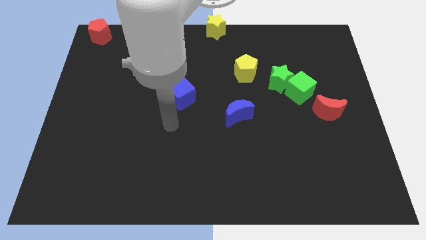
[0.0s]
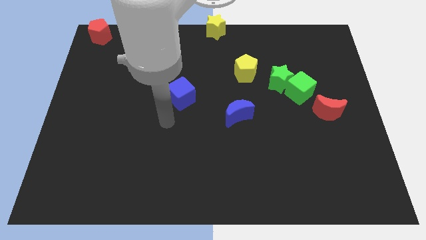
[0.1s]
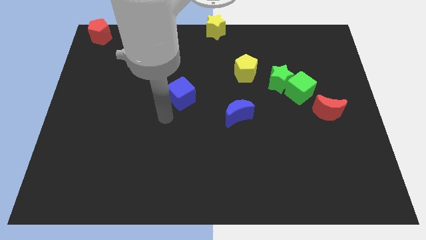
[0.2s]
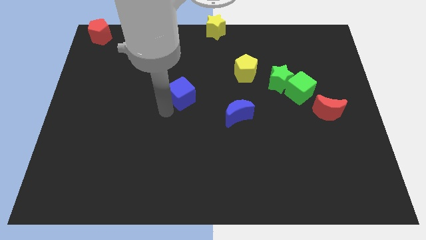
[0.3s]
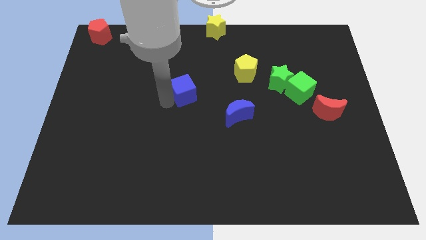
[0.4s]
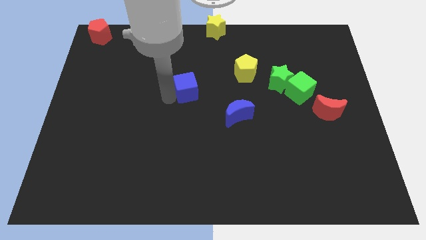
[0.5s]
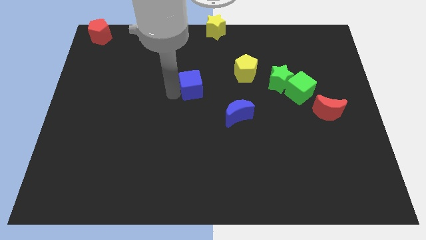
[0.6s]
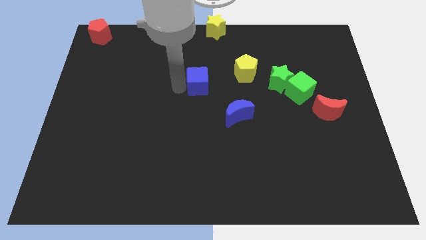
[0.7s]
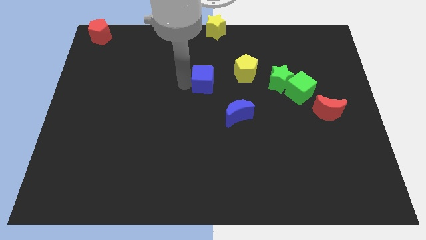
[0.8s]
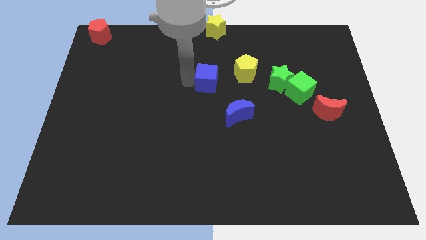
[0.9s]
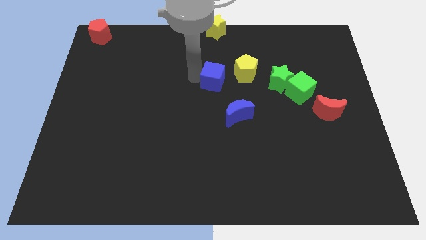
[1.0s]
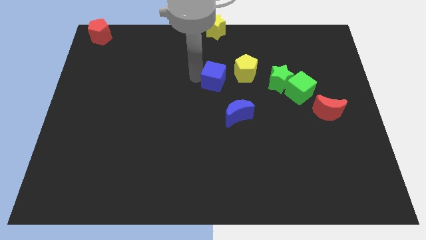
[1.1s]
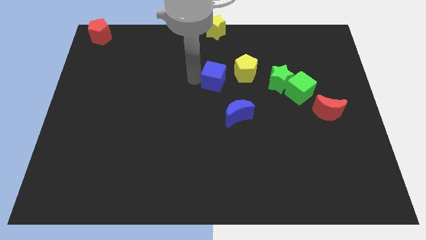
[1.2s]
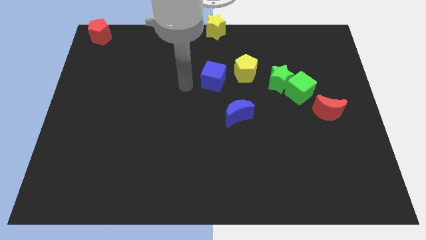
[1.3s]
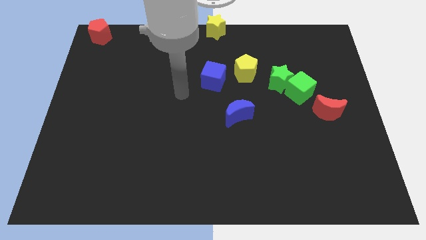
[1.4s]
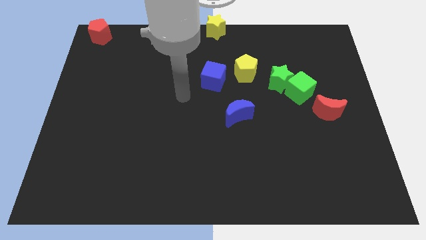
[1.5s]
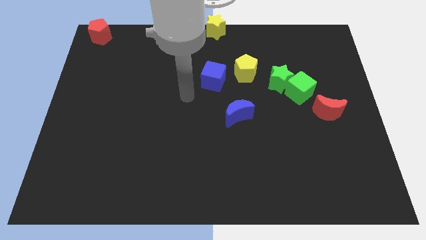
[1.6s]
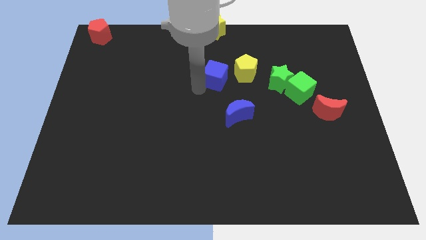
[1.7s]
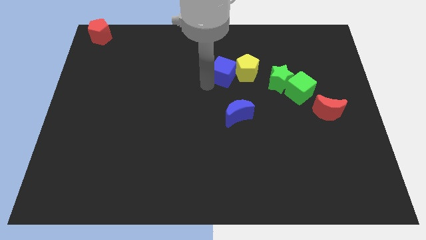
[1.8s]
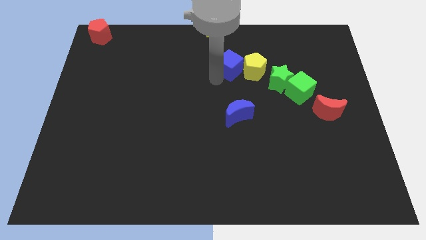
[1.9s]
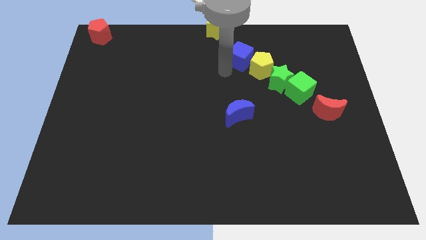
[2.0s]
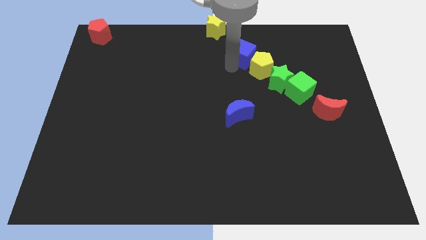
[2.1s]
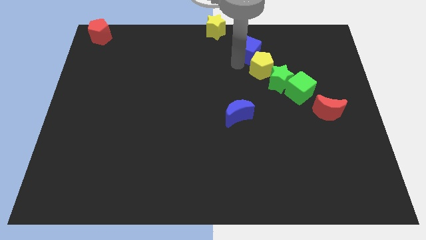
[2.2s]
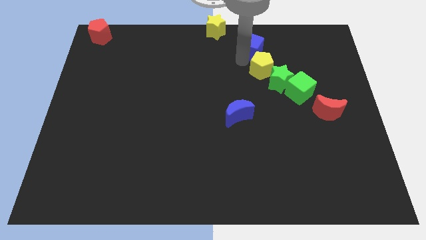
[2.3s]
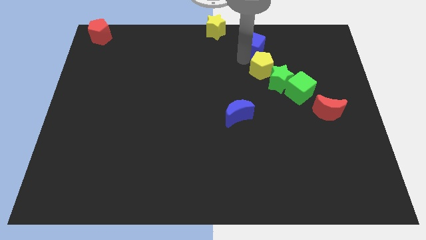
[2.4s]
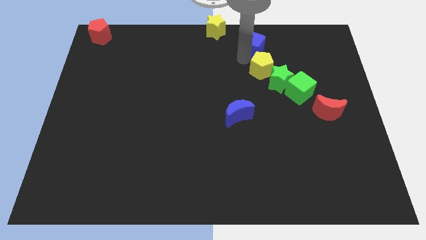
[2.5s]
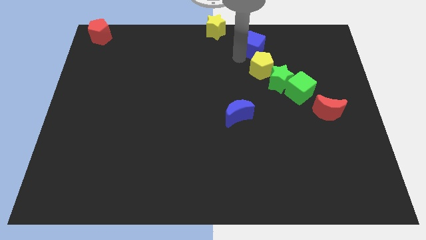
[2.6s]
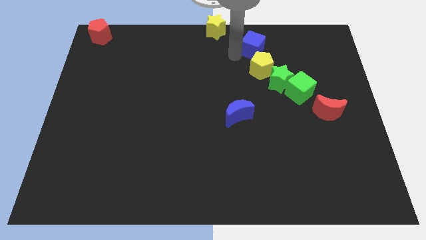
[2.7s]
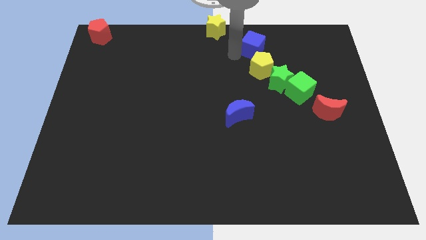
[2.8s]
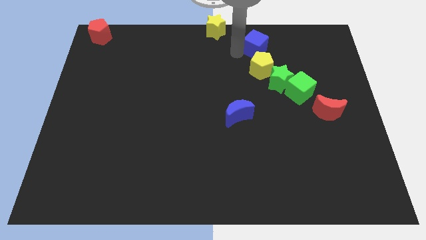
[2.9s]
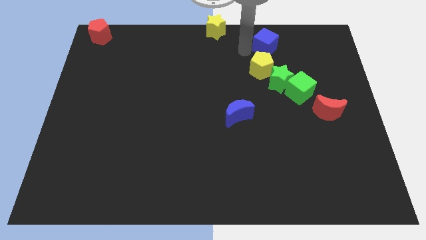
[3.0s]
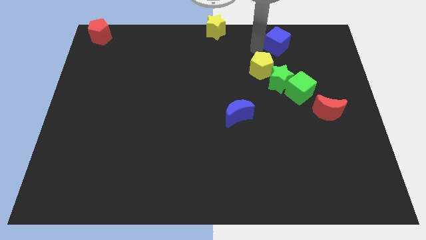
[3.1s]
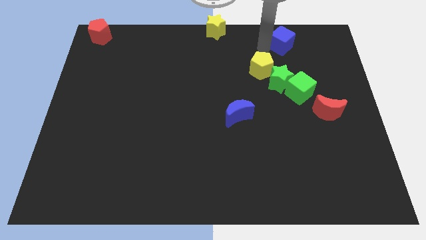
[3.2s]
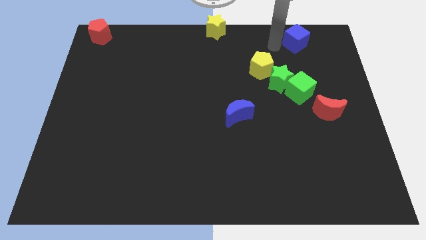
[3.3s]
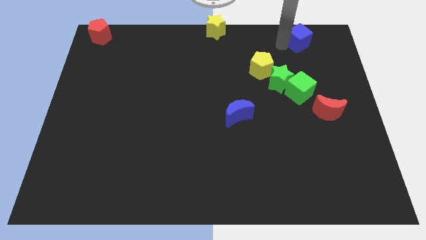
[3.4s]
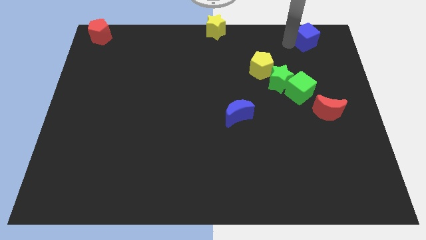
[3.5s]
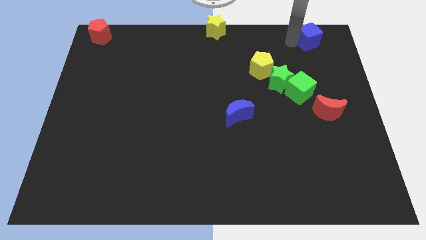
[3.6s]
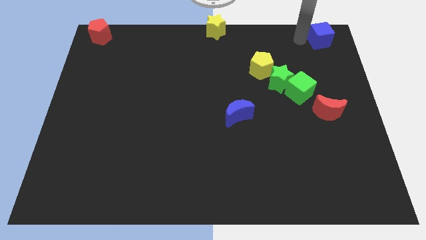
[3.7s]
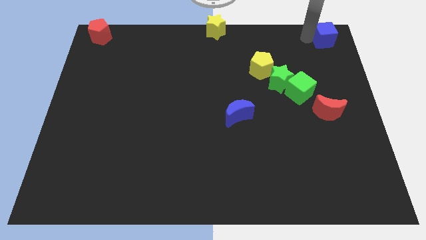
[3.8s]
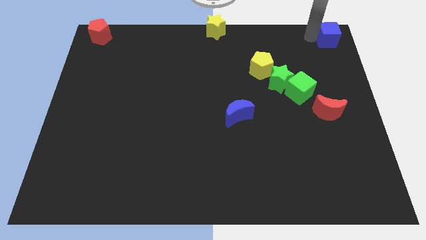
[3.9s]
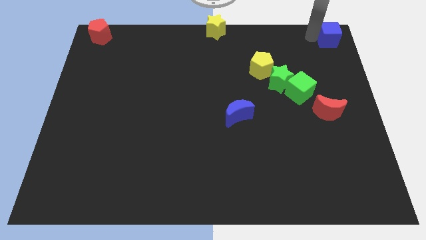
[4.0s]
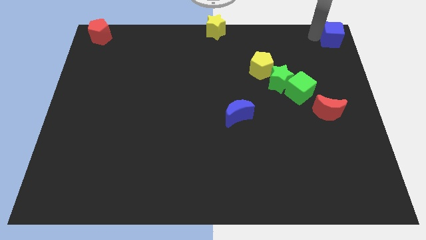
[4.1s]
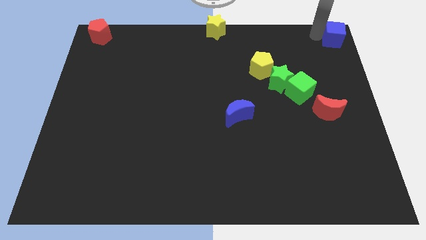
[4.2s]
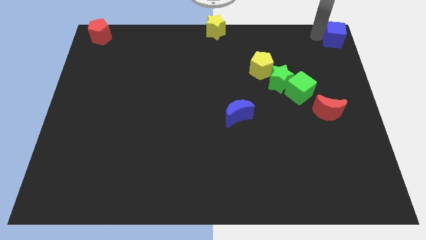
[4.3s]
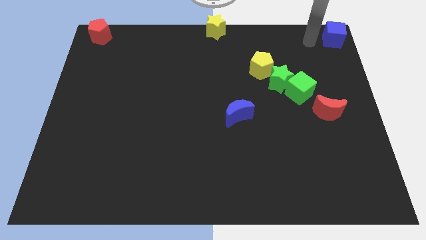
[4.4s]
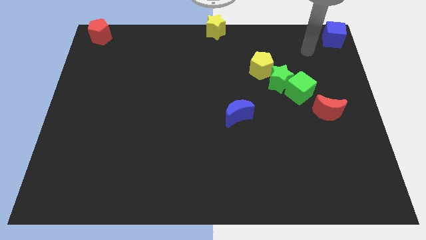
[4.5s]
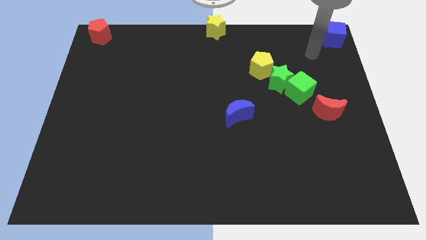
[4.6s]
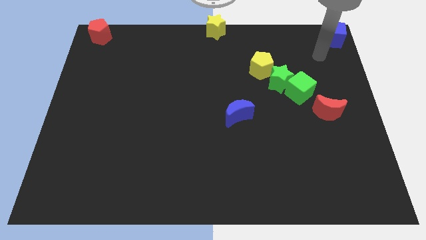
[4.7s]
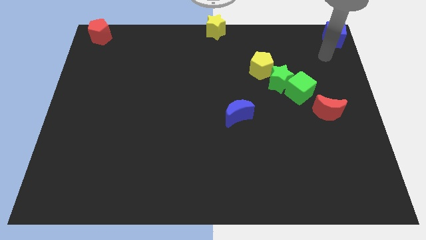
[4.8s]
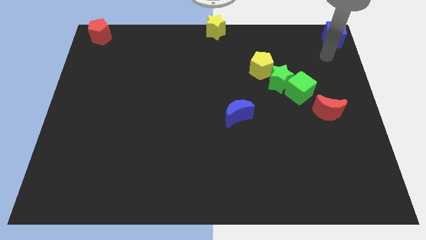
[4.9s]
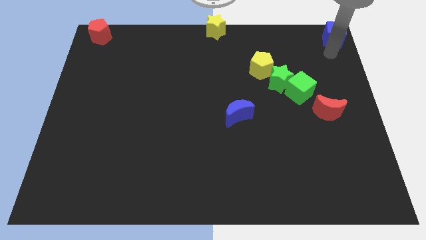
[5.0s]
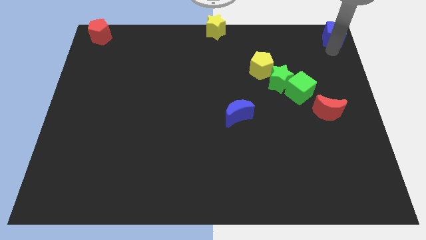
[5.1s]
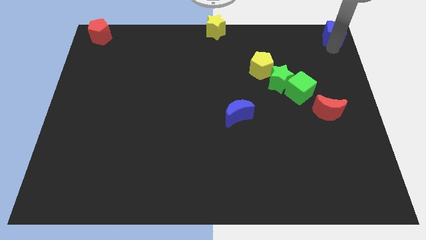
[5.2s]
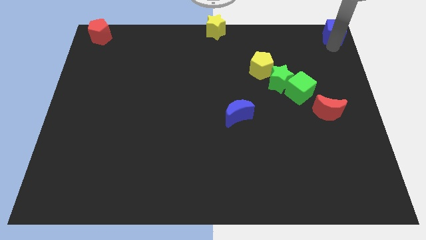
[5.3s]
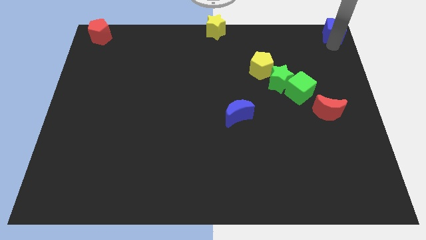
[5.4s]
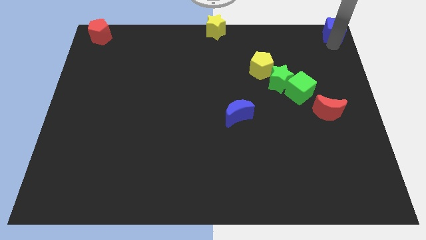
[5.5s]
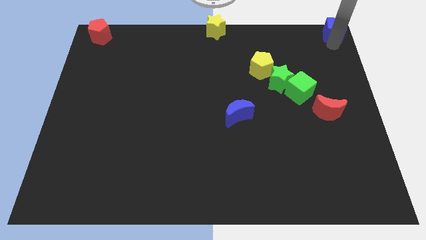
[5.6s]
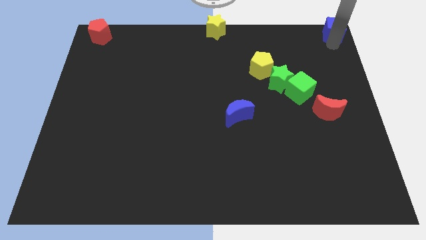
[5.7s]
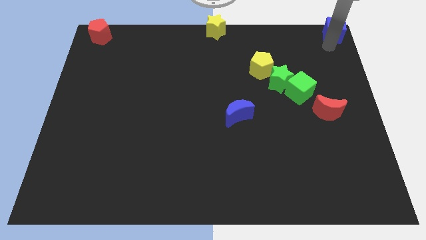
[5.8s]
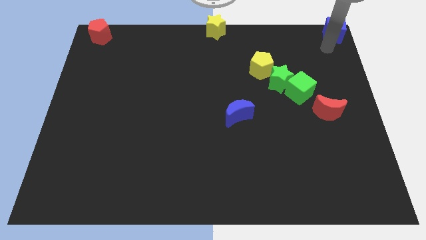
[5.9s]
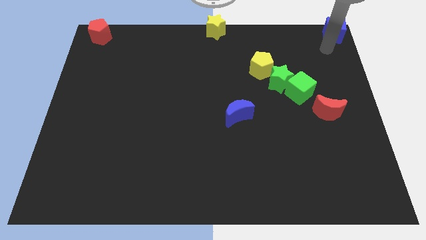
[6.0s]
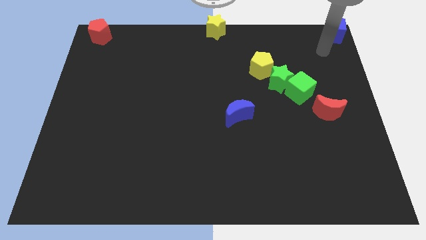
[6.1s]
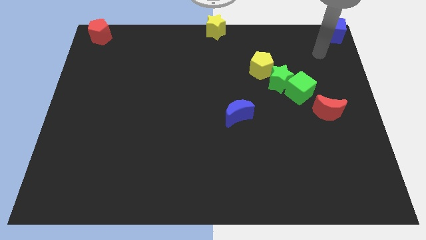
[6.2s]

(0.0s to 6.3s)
push the blue cube to the top right corner

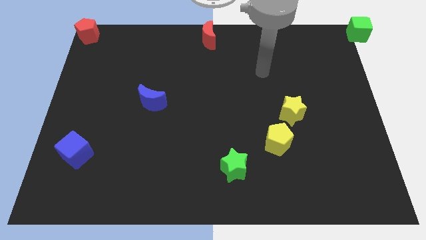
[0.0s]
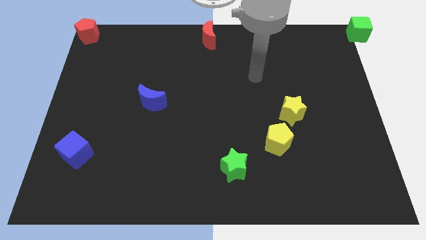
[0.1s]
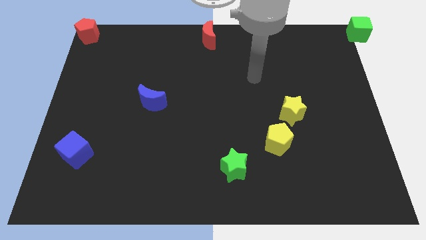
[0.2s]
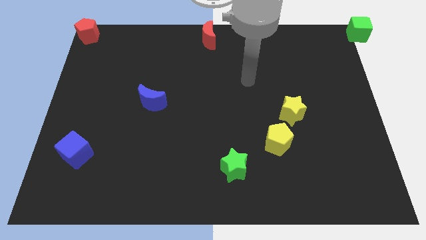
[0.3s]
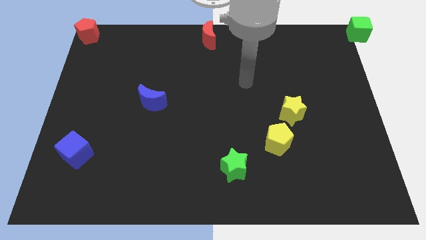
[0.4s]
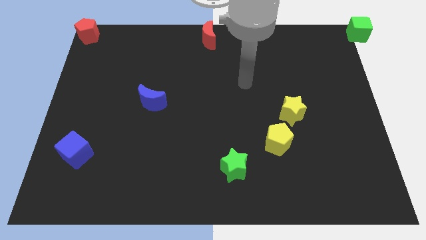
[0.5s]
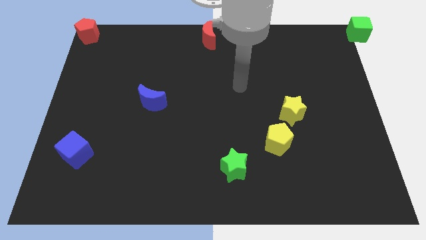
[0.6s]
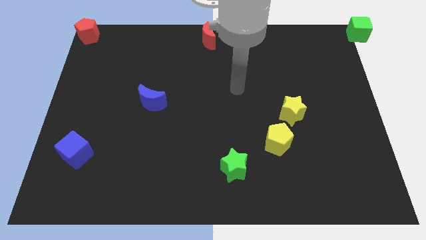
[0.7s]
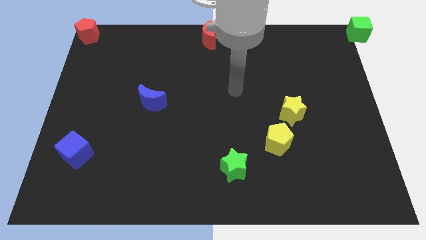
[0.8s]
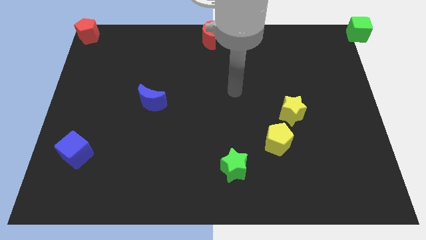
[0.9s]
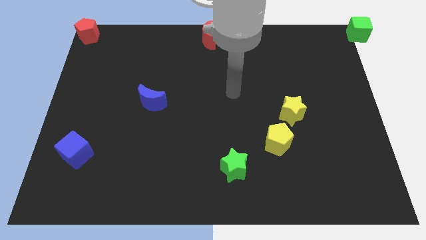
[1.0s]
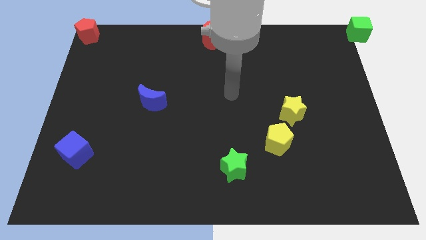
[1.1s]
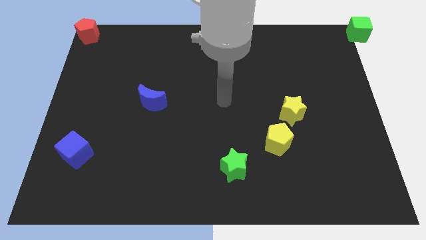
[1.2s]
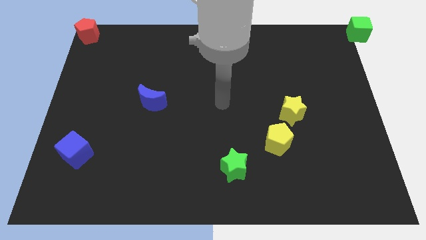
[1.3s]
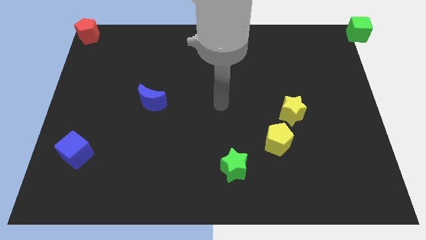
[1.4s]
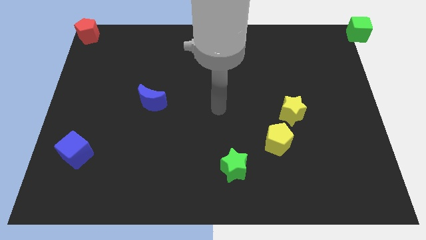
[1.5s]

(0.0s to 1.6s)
point your hand in between the blue crescent and the yellow star

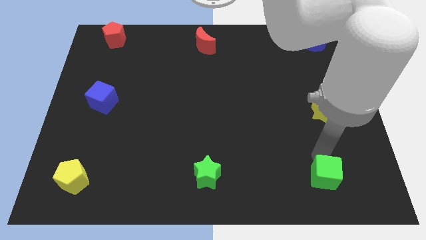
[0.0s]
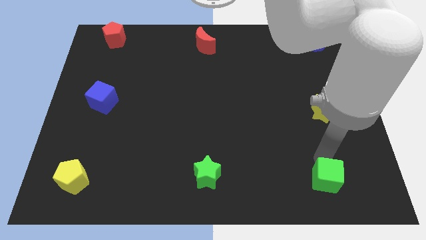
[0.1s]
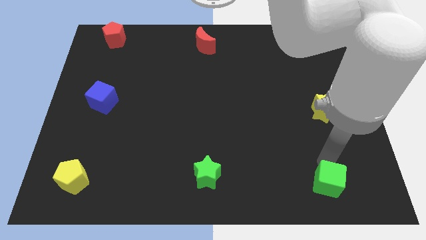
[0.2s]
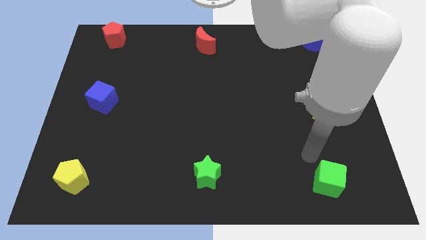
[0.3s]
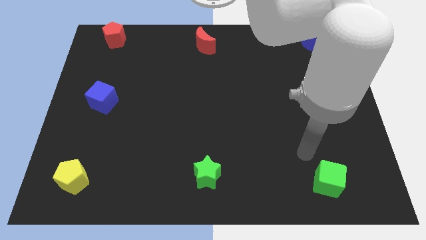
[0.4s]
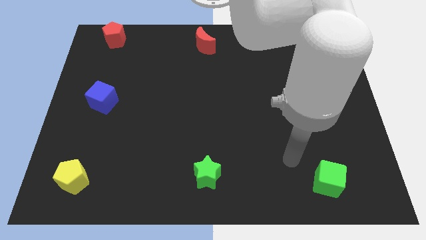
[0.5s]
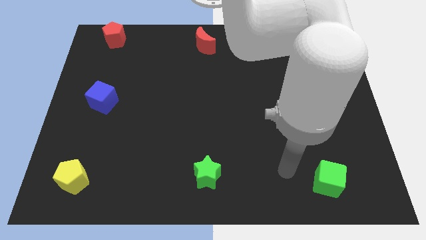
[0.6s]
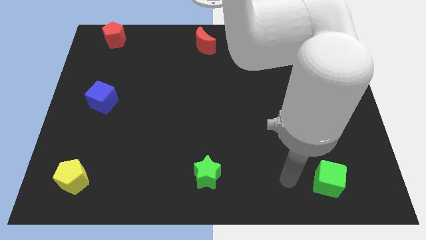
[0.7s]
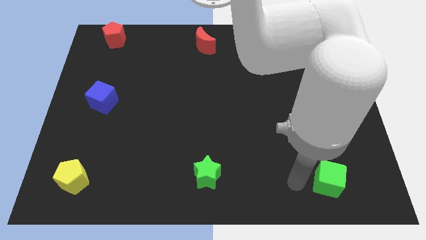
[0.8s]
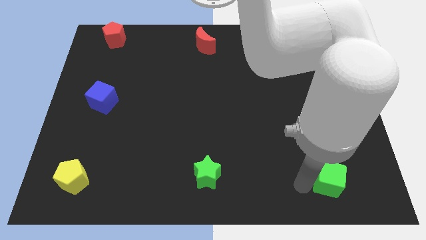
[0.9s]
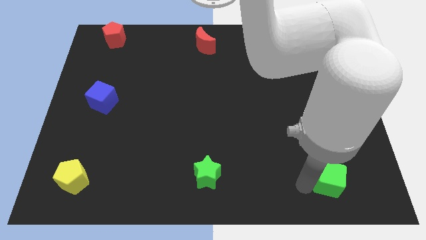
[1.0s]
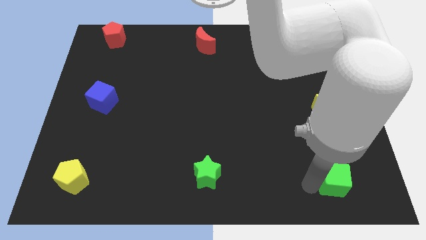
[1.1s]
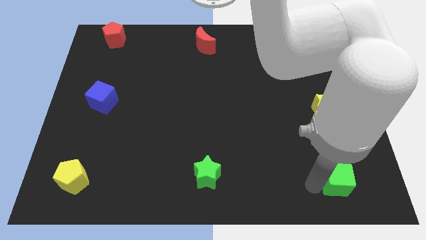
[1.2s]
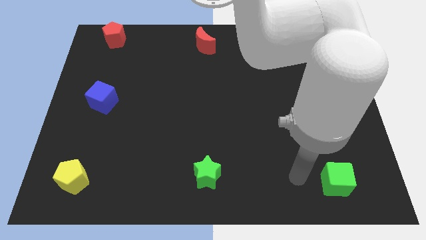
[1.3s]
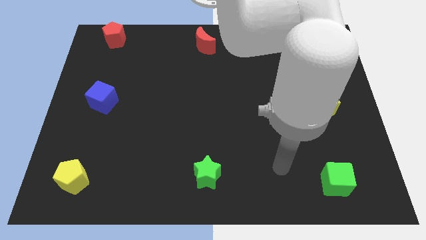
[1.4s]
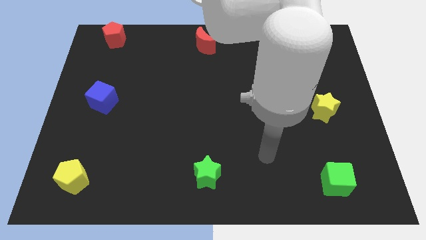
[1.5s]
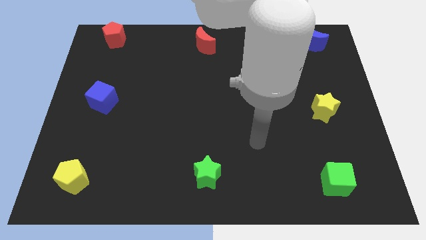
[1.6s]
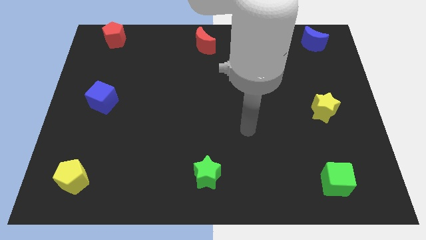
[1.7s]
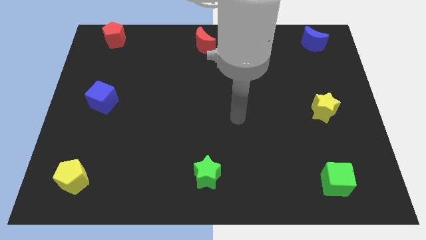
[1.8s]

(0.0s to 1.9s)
move the green cube vertical parallel to the yellow star
